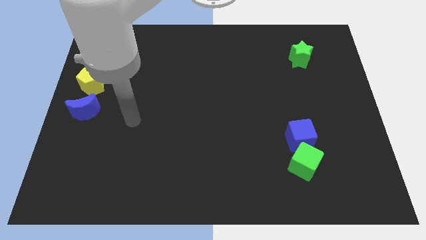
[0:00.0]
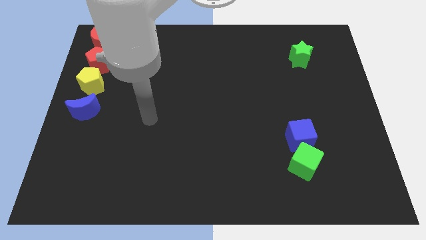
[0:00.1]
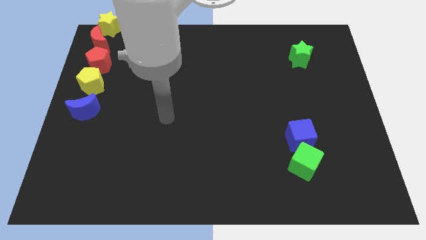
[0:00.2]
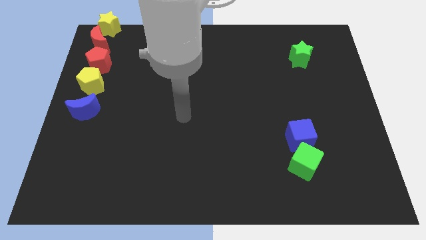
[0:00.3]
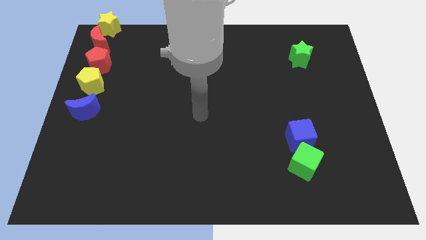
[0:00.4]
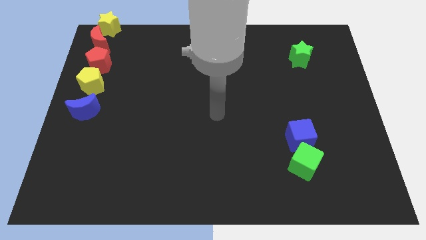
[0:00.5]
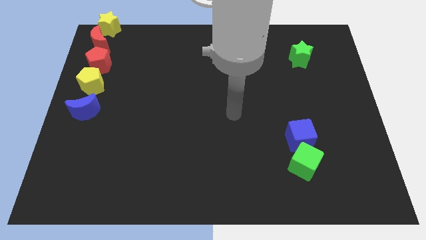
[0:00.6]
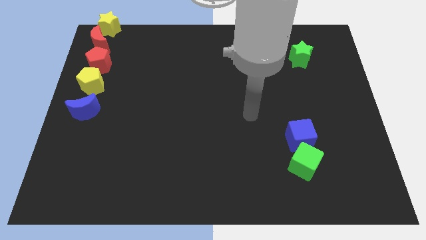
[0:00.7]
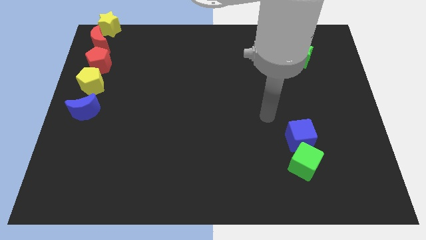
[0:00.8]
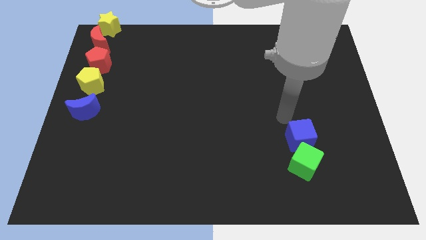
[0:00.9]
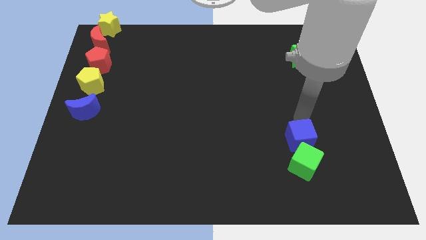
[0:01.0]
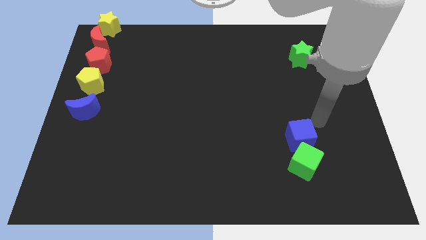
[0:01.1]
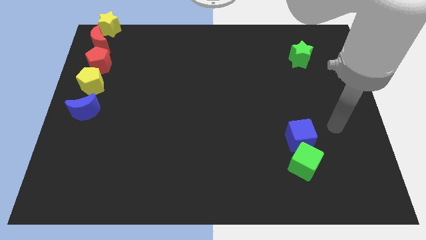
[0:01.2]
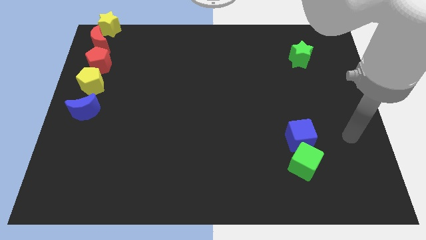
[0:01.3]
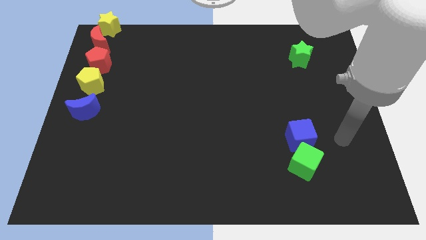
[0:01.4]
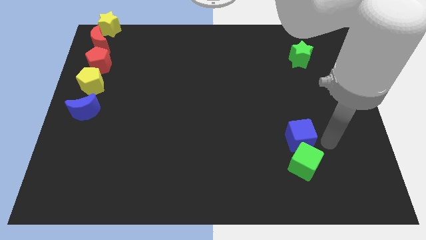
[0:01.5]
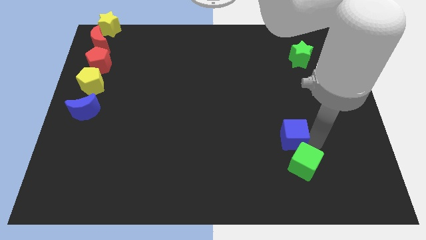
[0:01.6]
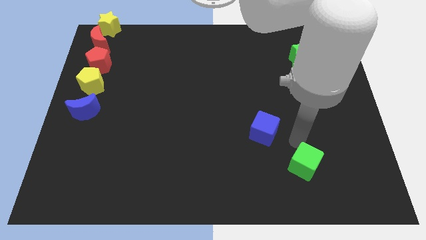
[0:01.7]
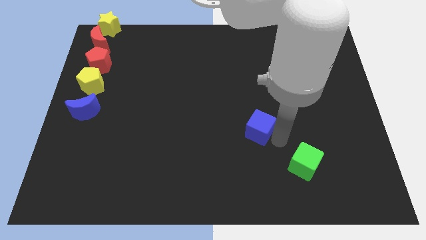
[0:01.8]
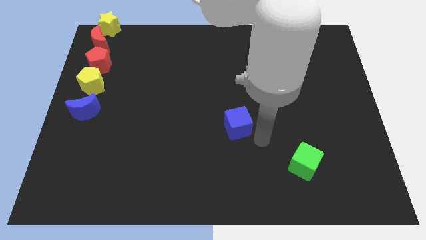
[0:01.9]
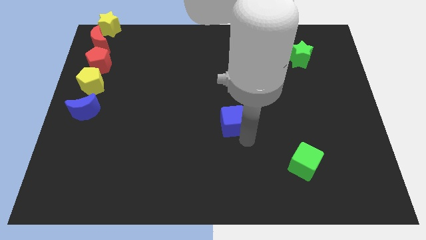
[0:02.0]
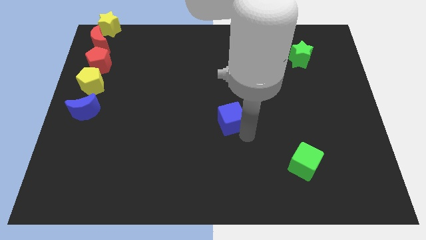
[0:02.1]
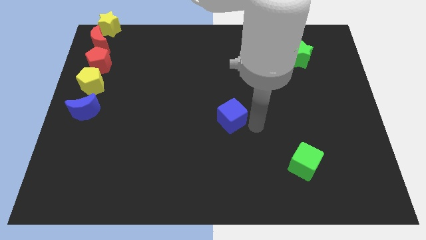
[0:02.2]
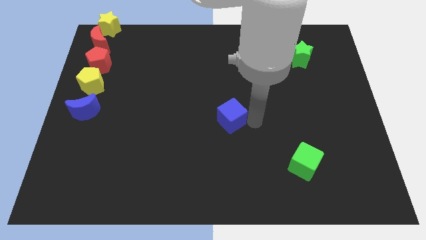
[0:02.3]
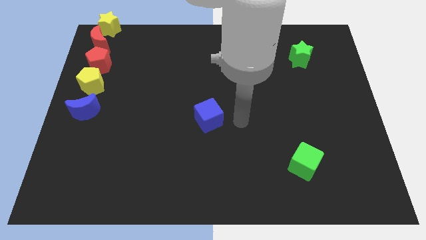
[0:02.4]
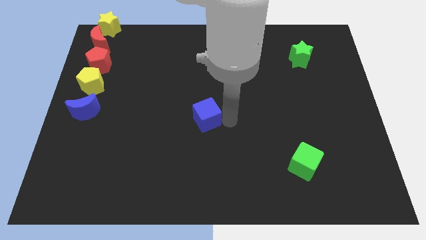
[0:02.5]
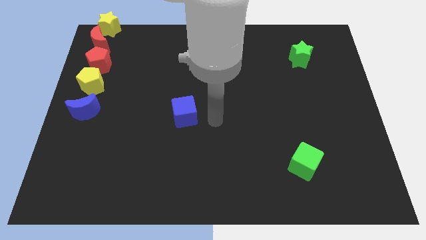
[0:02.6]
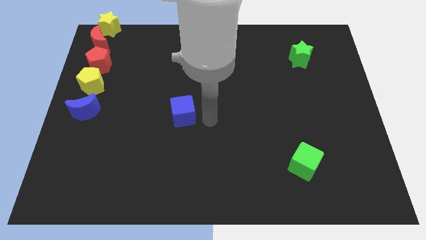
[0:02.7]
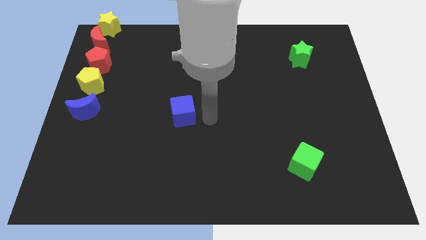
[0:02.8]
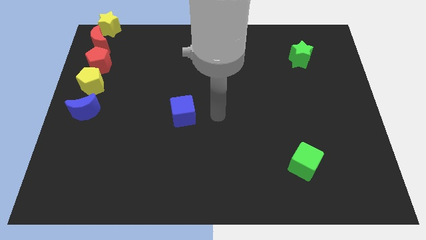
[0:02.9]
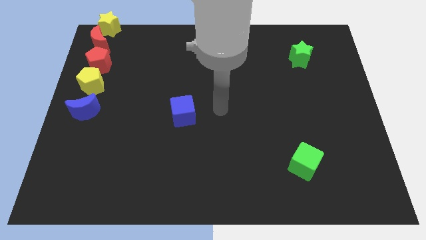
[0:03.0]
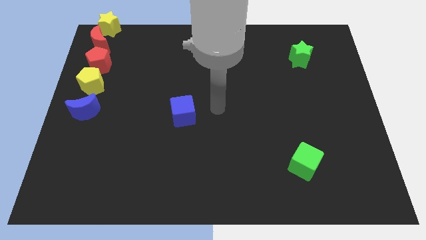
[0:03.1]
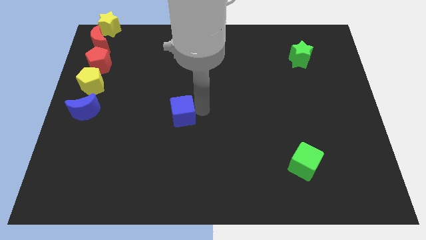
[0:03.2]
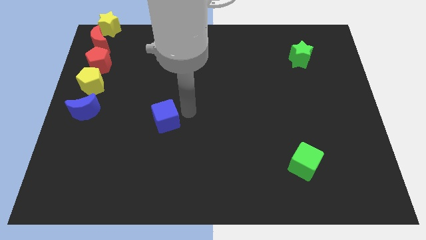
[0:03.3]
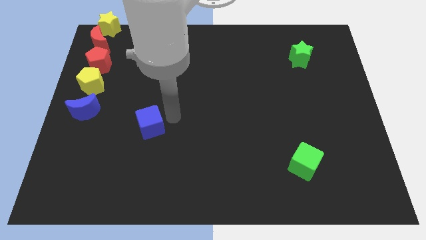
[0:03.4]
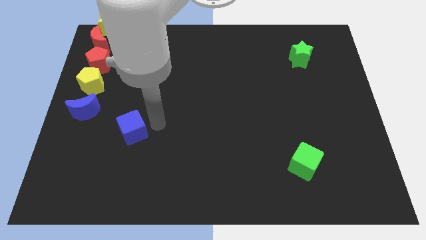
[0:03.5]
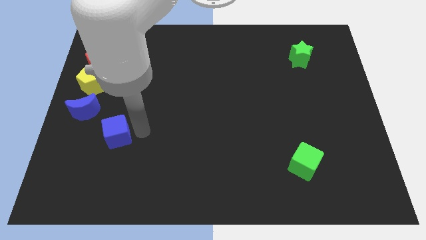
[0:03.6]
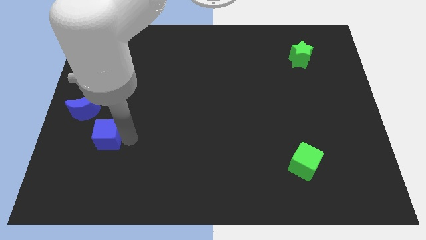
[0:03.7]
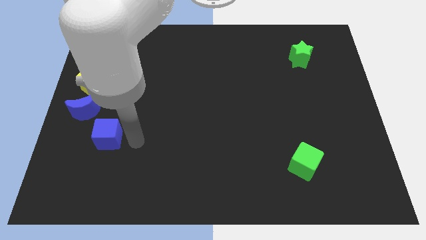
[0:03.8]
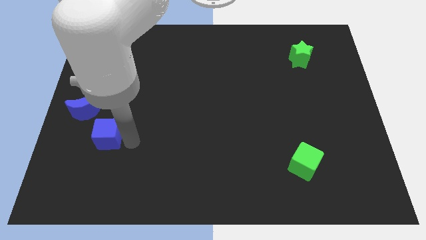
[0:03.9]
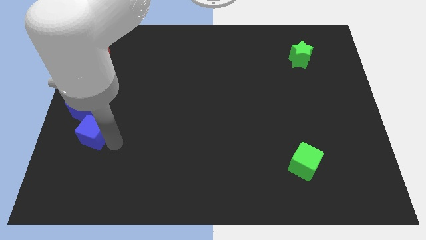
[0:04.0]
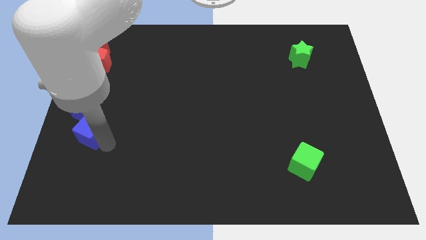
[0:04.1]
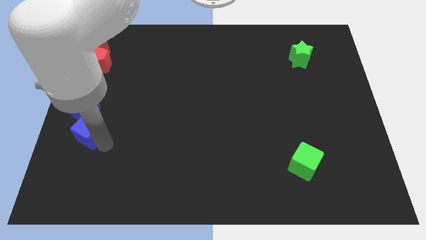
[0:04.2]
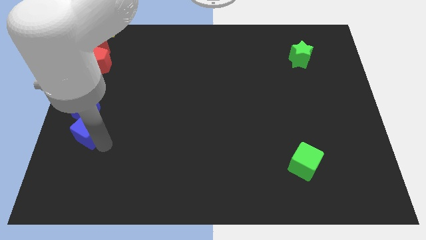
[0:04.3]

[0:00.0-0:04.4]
move the blue cube below the blue crescent

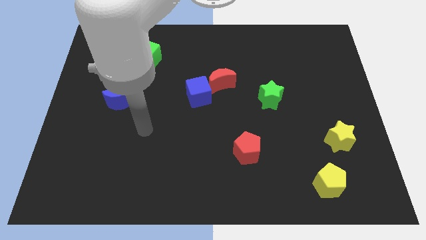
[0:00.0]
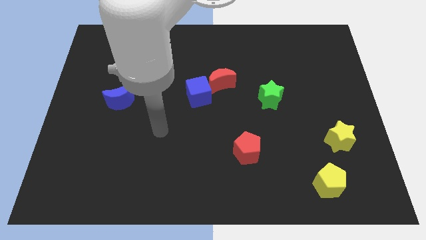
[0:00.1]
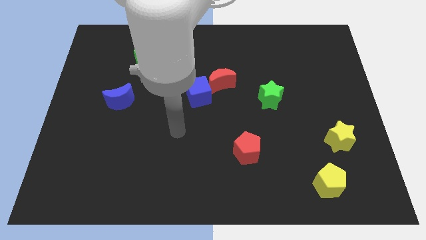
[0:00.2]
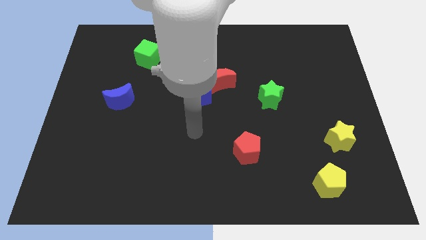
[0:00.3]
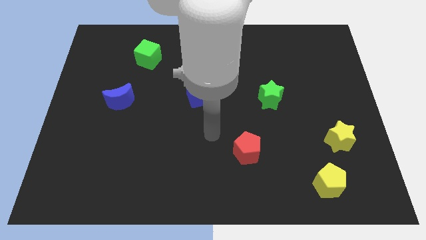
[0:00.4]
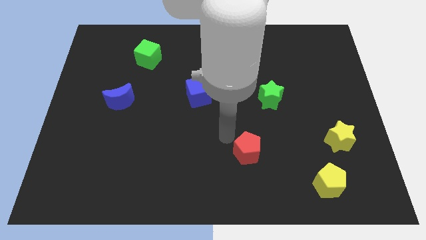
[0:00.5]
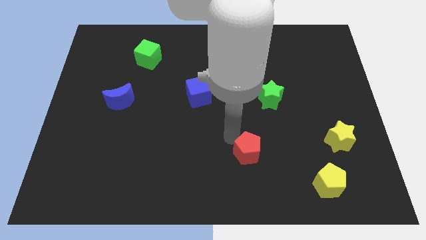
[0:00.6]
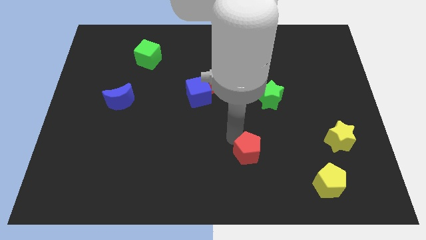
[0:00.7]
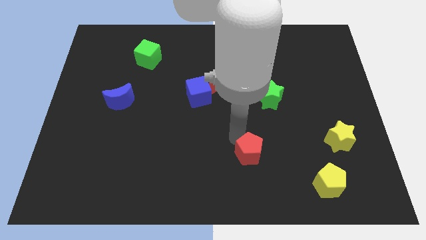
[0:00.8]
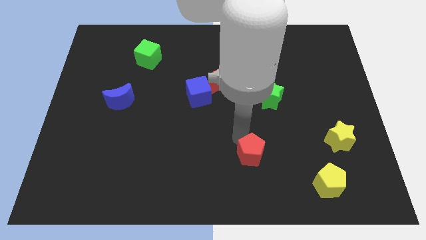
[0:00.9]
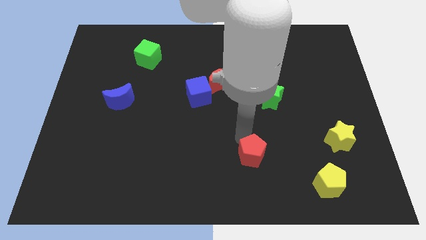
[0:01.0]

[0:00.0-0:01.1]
tap your arm to top left side of red pentagon

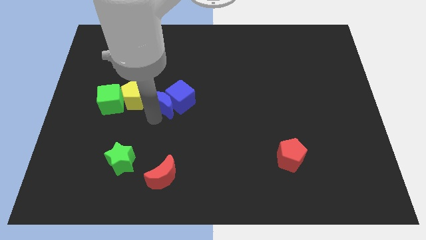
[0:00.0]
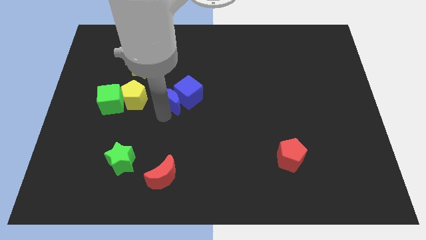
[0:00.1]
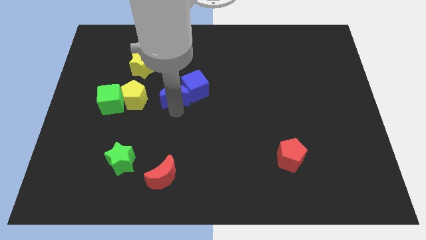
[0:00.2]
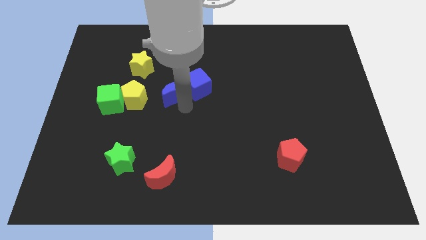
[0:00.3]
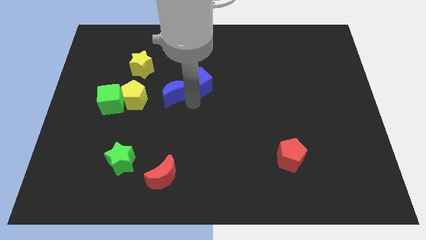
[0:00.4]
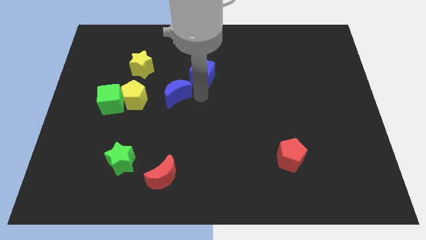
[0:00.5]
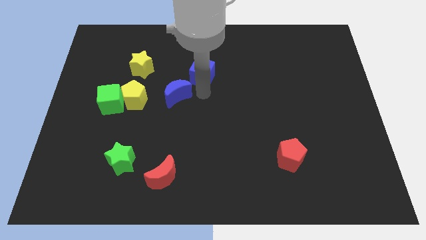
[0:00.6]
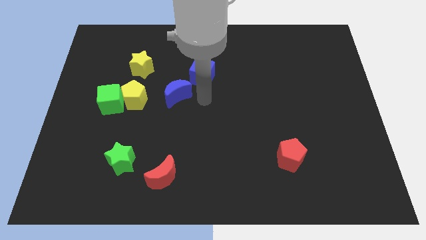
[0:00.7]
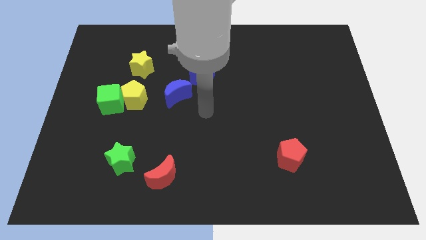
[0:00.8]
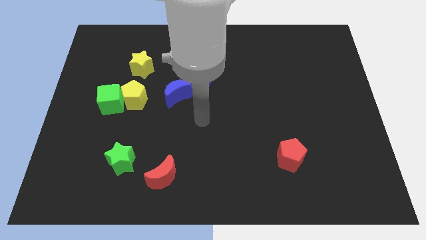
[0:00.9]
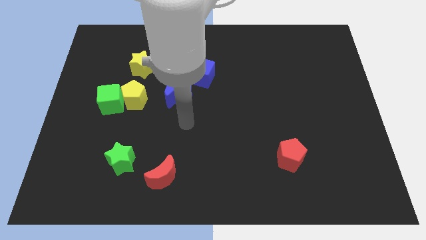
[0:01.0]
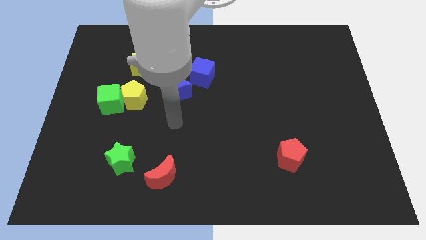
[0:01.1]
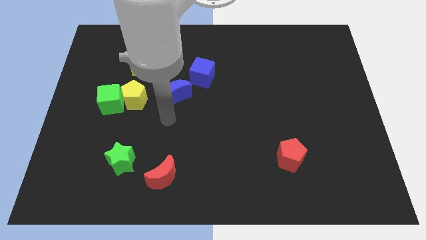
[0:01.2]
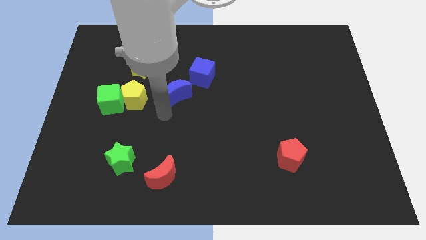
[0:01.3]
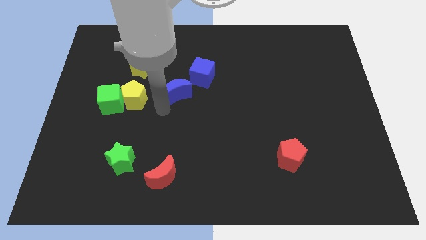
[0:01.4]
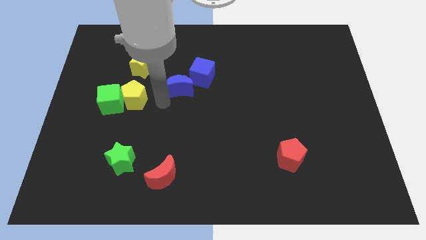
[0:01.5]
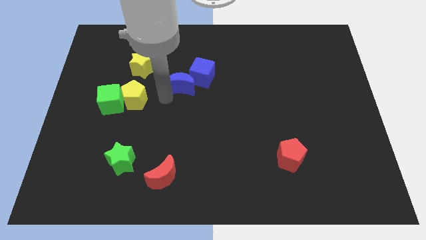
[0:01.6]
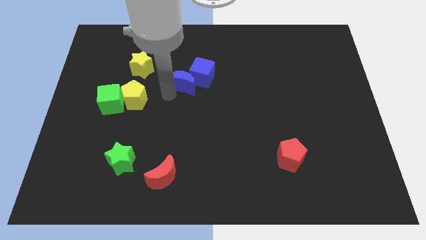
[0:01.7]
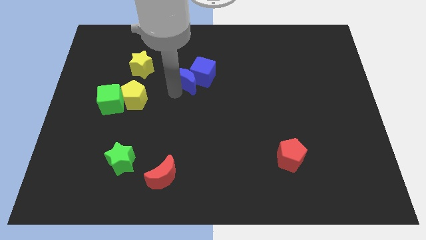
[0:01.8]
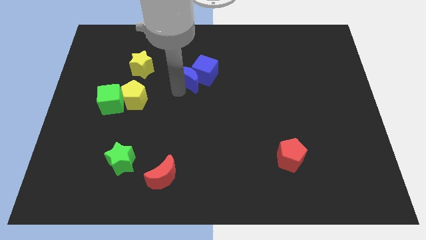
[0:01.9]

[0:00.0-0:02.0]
push both the blue crescent and blue cube slightly towards top of the board

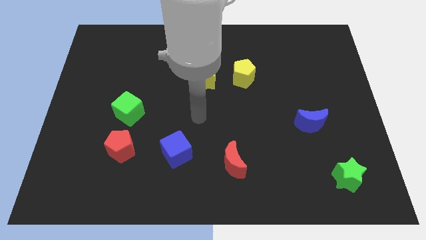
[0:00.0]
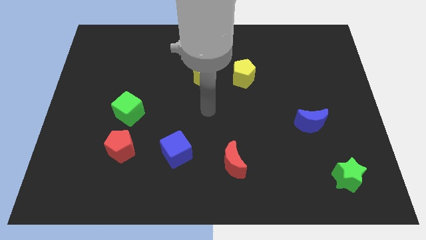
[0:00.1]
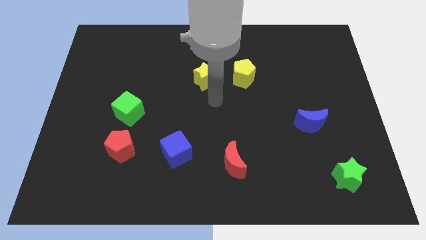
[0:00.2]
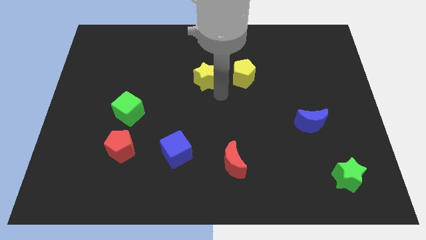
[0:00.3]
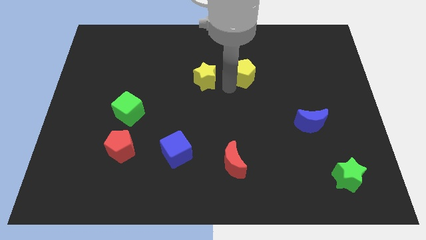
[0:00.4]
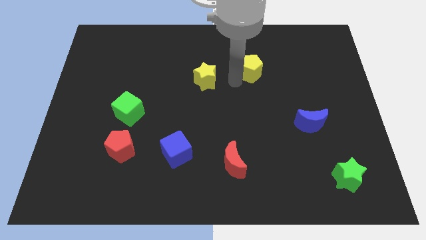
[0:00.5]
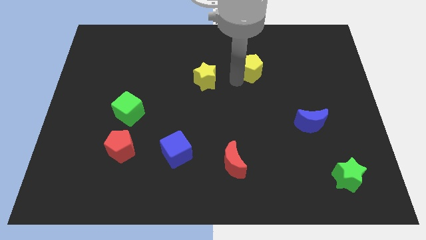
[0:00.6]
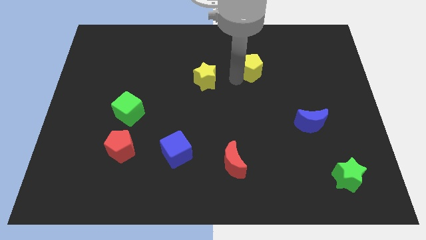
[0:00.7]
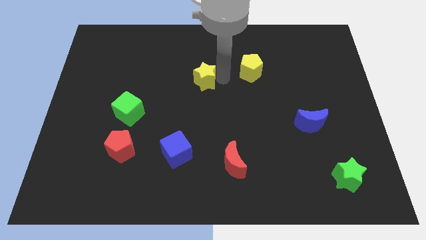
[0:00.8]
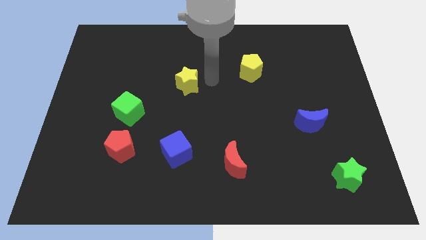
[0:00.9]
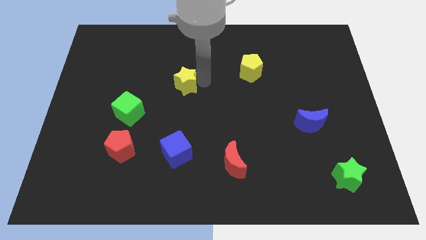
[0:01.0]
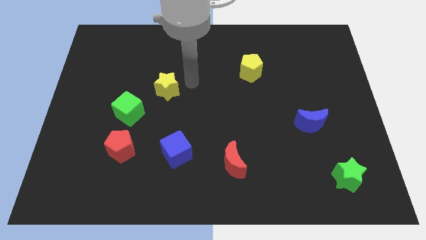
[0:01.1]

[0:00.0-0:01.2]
separate the yellow star and yellow pentagon from each other

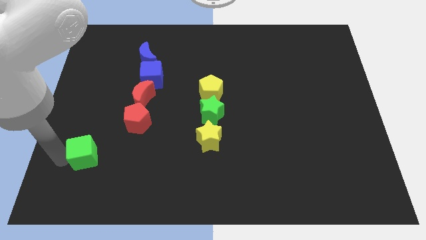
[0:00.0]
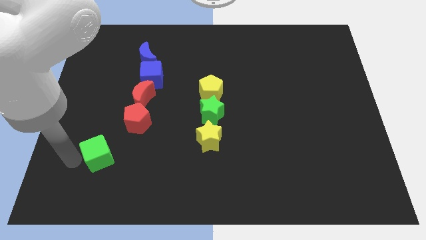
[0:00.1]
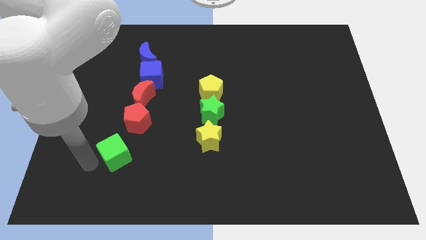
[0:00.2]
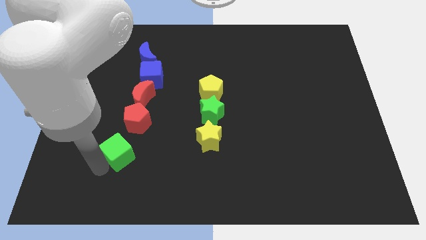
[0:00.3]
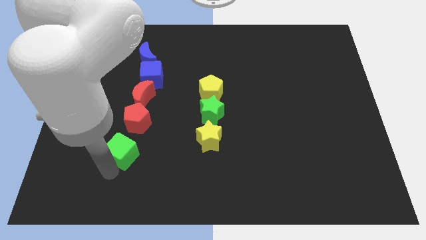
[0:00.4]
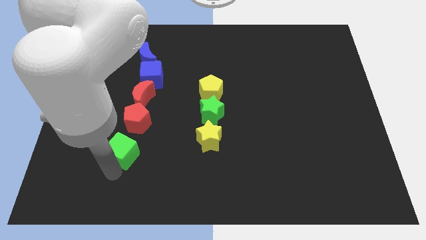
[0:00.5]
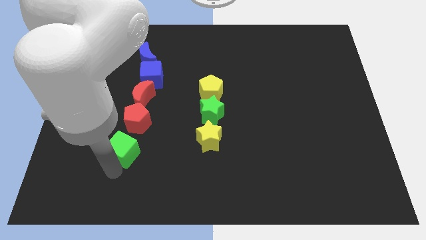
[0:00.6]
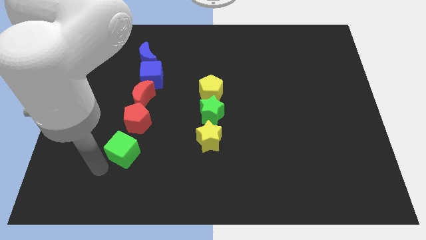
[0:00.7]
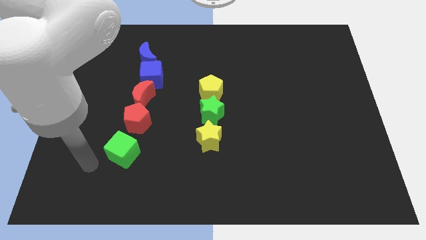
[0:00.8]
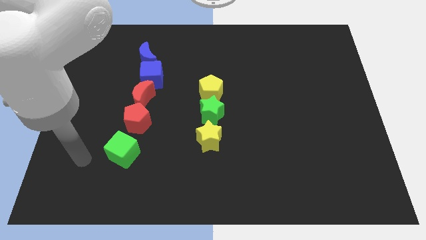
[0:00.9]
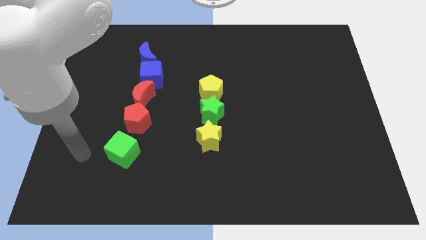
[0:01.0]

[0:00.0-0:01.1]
push the green cube slightly to the right
